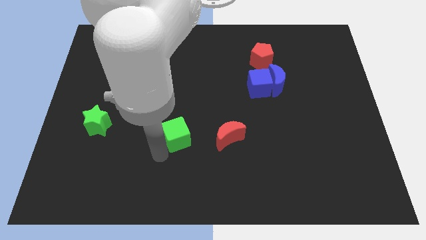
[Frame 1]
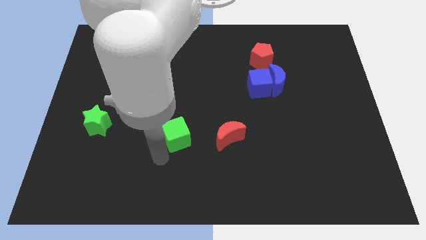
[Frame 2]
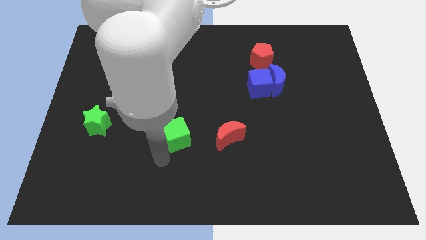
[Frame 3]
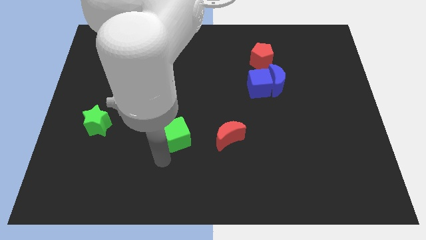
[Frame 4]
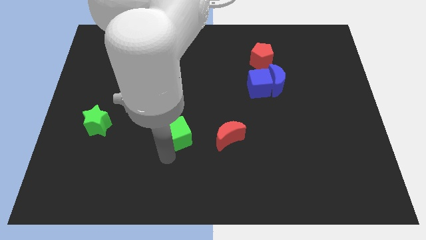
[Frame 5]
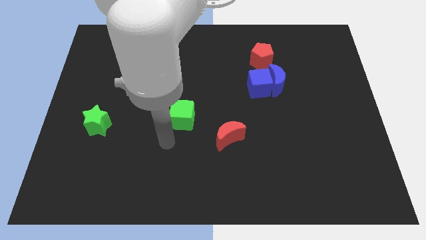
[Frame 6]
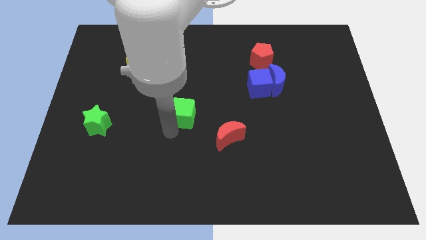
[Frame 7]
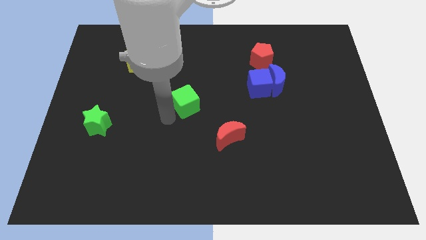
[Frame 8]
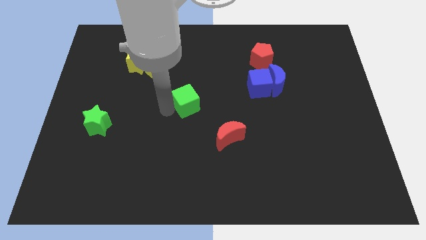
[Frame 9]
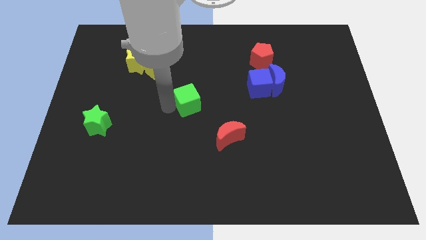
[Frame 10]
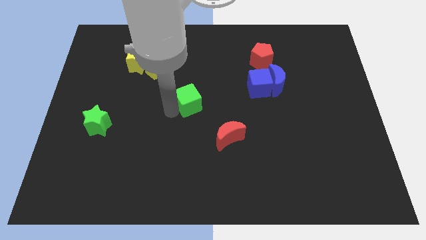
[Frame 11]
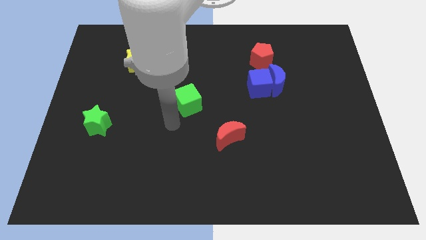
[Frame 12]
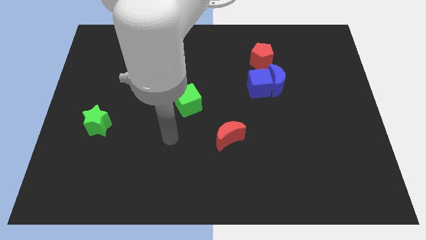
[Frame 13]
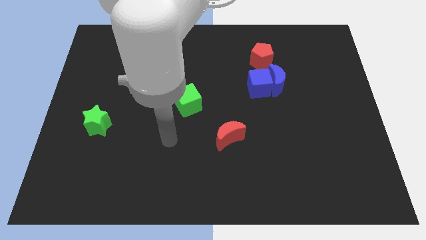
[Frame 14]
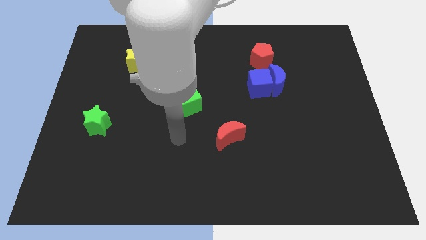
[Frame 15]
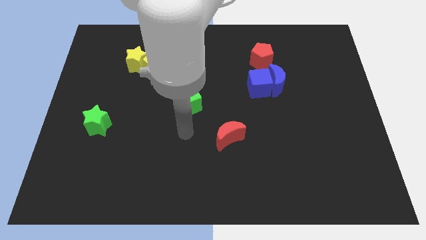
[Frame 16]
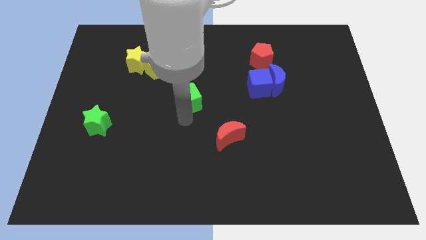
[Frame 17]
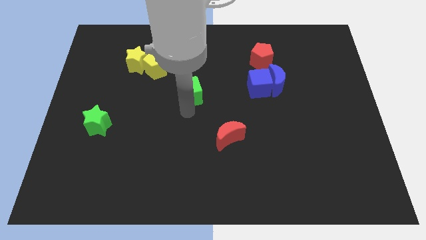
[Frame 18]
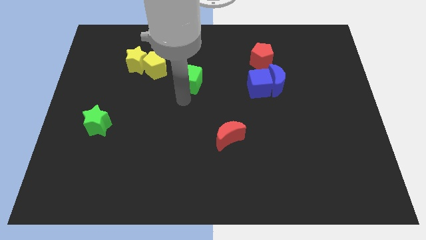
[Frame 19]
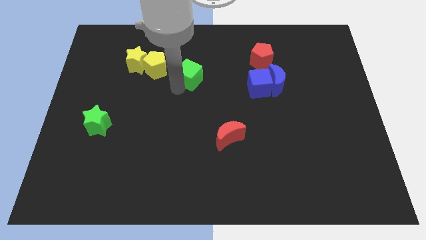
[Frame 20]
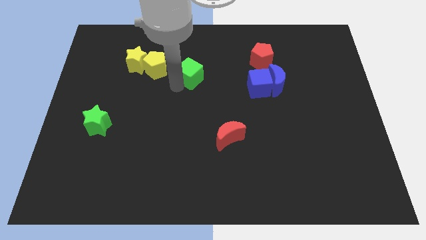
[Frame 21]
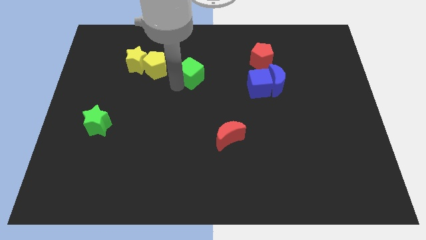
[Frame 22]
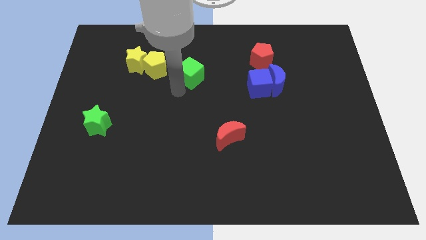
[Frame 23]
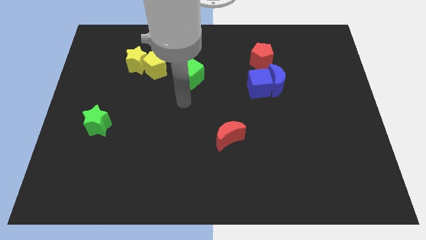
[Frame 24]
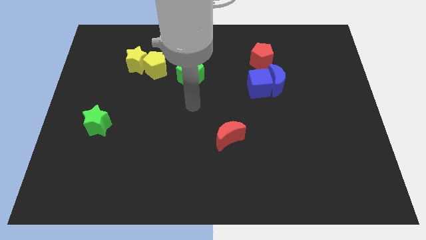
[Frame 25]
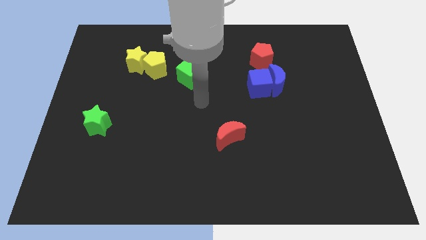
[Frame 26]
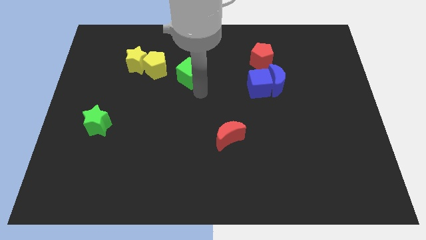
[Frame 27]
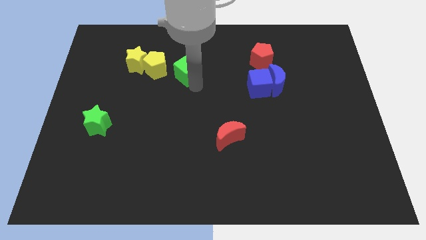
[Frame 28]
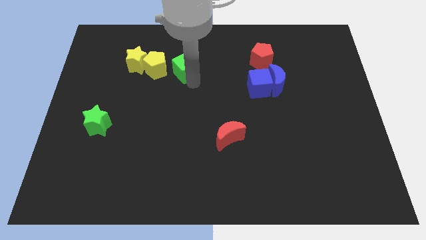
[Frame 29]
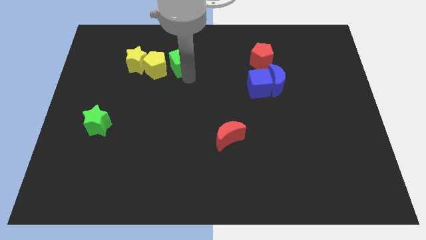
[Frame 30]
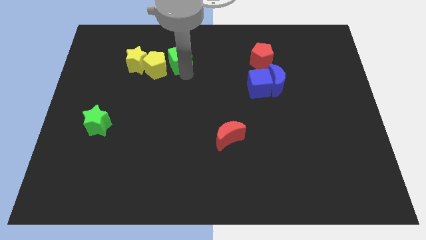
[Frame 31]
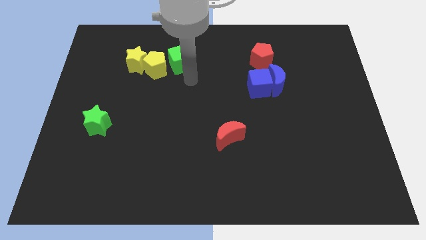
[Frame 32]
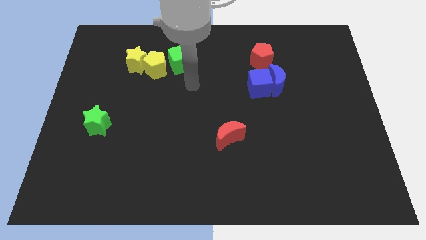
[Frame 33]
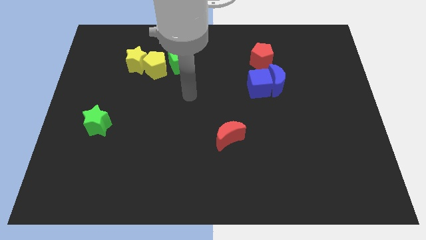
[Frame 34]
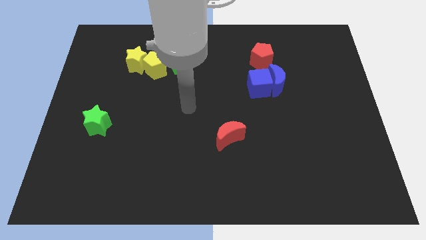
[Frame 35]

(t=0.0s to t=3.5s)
push the green cube to the right of the yellow pentagon

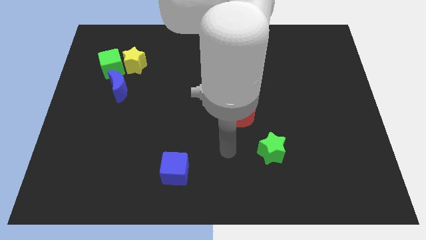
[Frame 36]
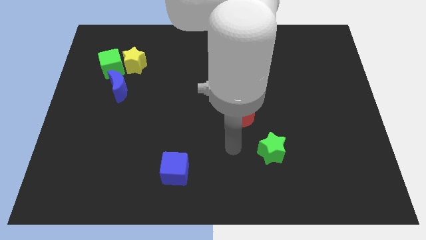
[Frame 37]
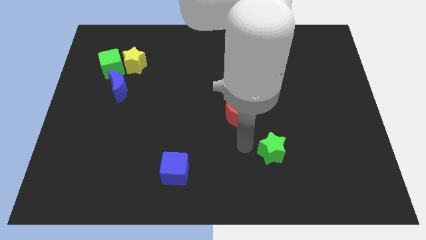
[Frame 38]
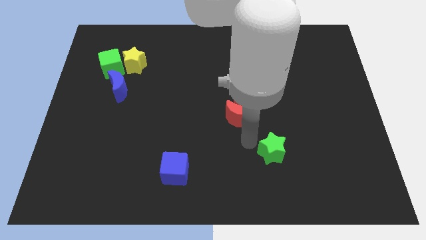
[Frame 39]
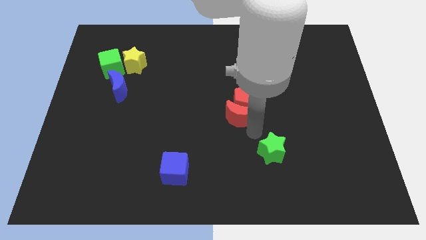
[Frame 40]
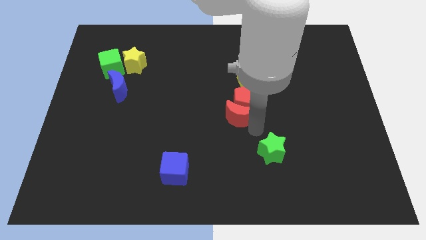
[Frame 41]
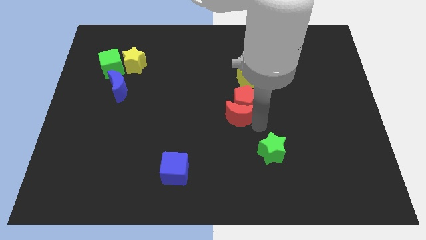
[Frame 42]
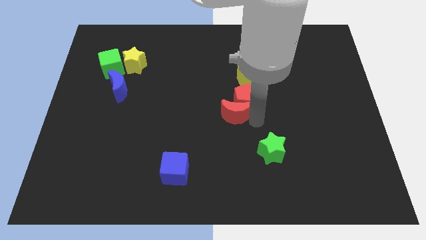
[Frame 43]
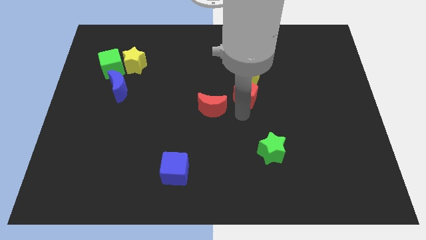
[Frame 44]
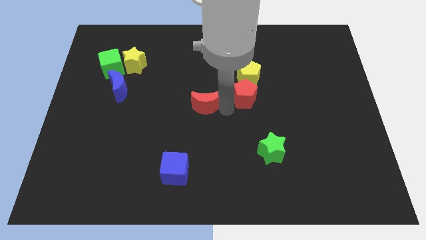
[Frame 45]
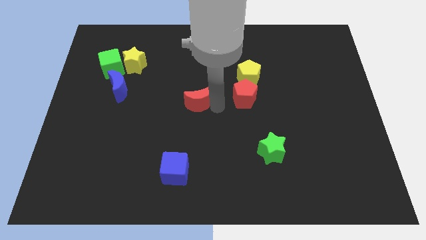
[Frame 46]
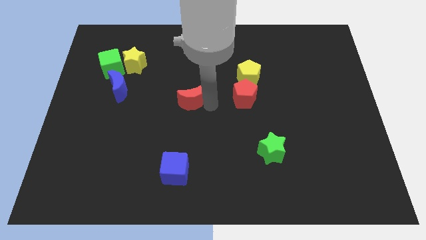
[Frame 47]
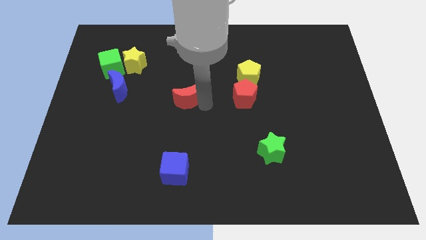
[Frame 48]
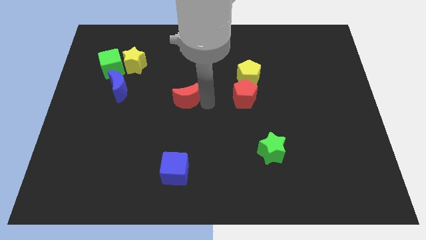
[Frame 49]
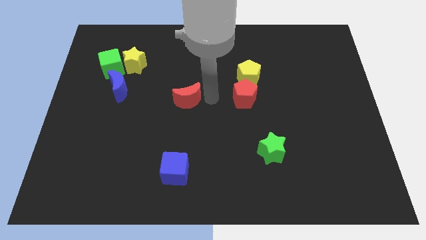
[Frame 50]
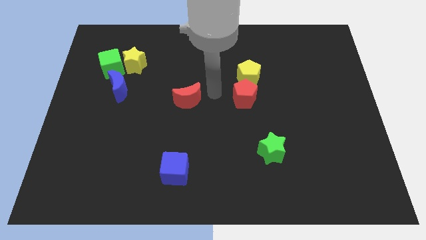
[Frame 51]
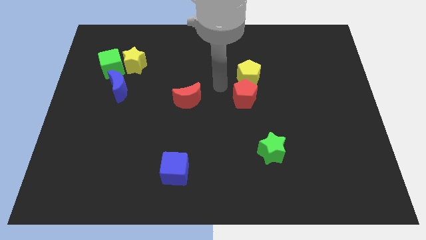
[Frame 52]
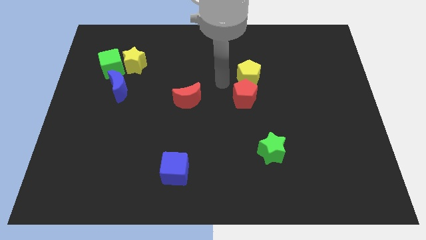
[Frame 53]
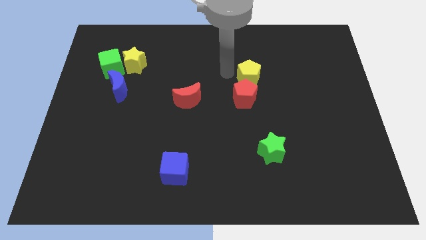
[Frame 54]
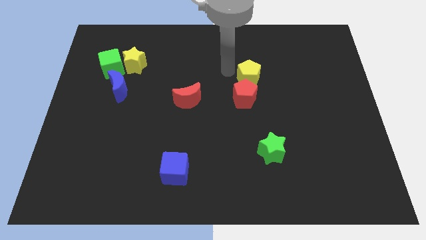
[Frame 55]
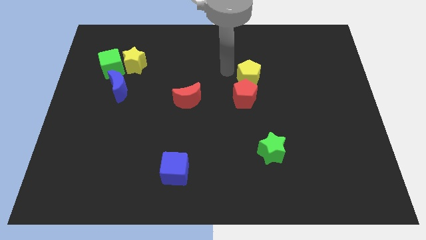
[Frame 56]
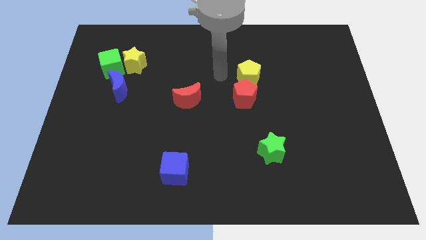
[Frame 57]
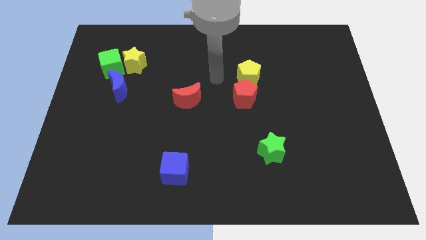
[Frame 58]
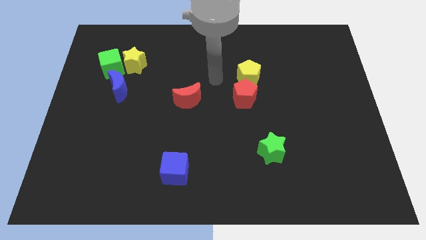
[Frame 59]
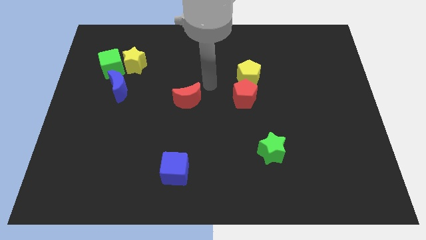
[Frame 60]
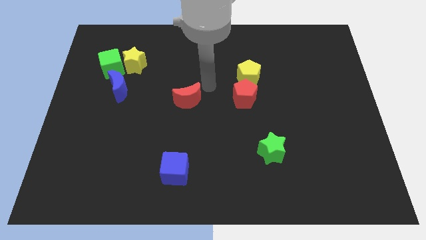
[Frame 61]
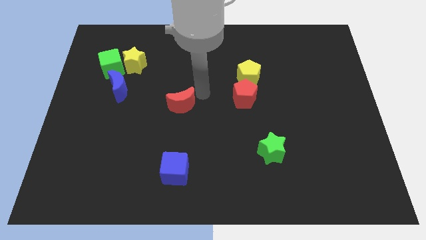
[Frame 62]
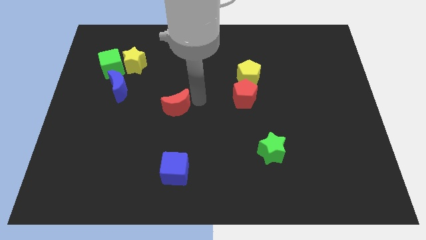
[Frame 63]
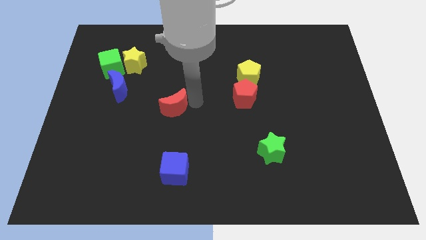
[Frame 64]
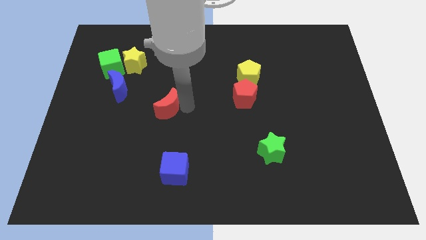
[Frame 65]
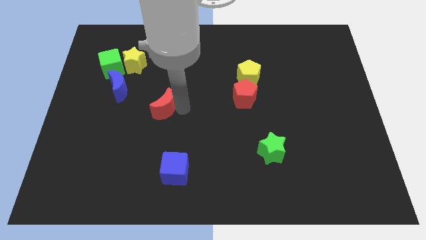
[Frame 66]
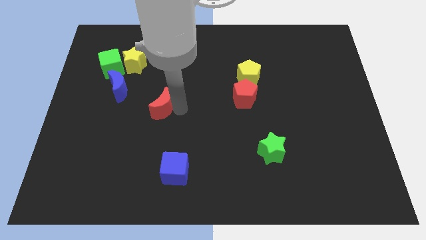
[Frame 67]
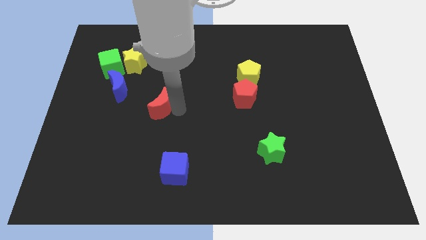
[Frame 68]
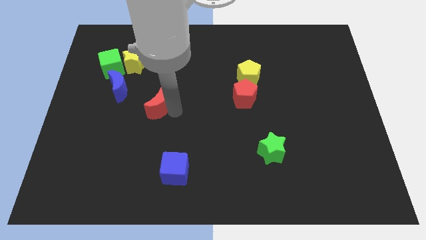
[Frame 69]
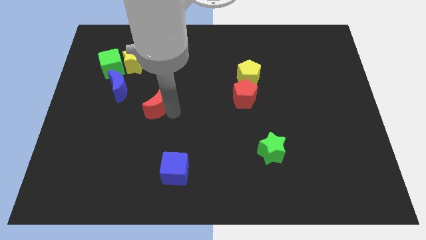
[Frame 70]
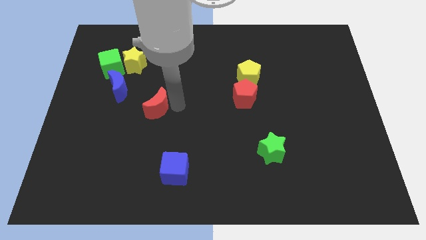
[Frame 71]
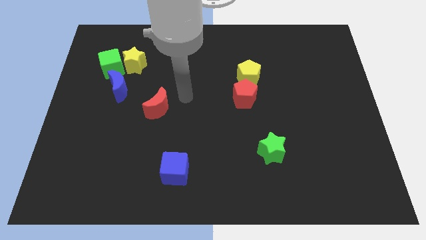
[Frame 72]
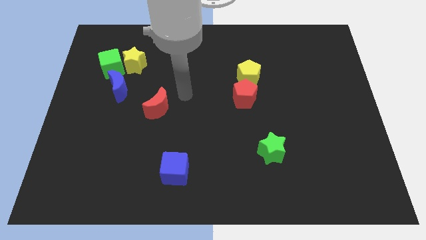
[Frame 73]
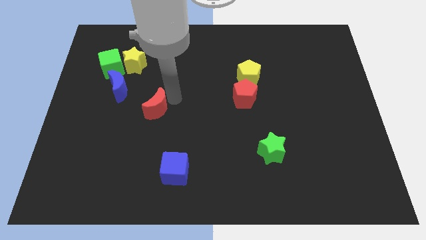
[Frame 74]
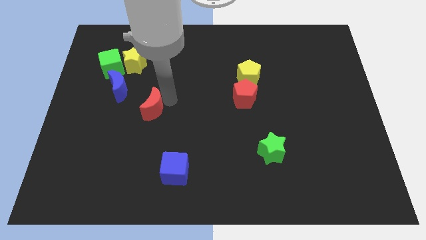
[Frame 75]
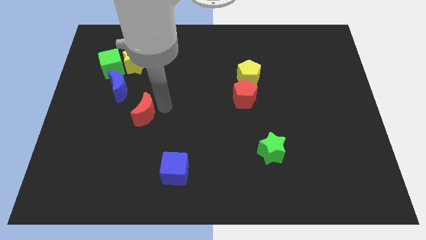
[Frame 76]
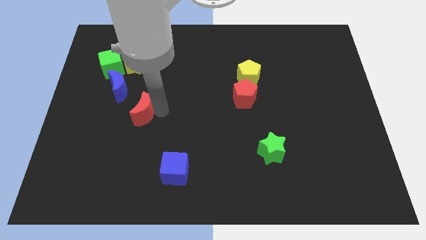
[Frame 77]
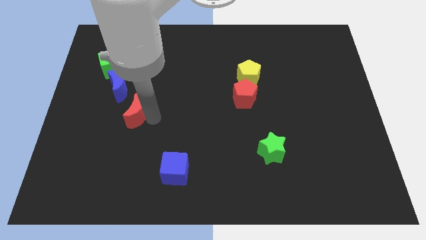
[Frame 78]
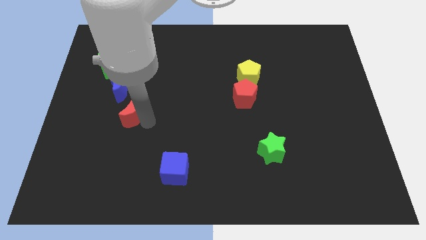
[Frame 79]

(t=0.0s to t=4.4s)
push red crescent

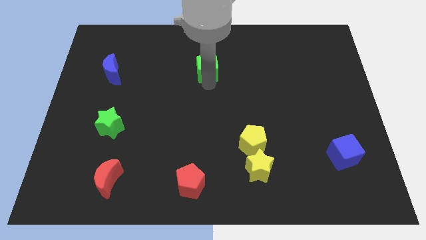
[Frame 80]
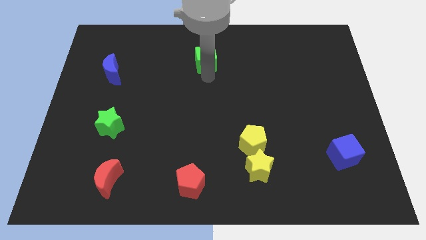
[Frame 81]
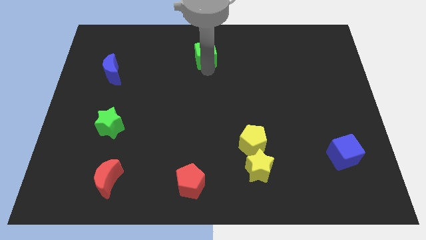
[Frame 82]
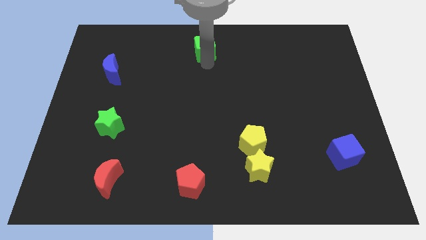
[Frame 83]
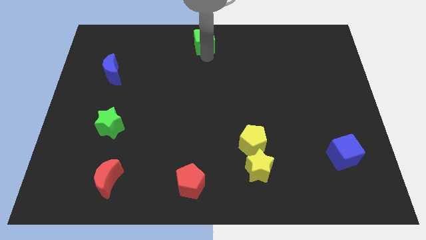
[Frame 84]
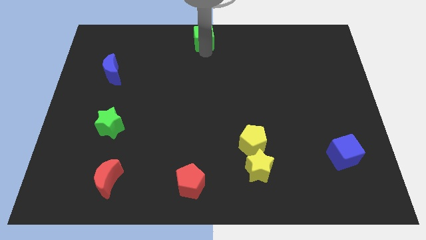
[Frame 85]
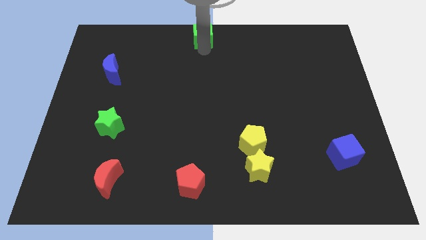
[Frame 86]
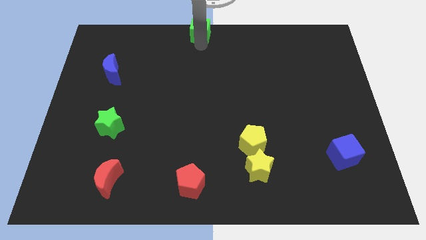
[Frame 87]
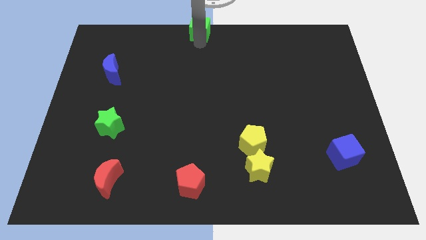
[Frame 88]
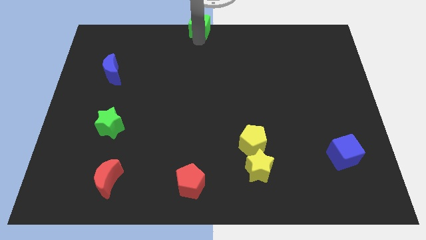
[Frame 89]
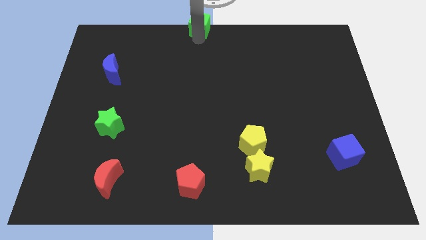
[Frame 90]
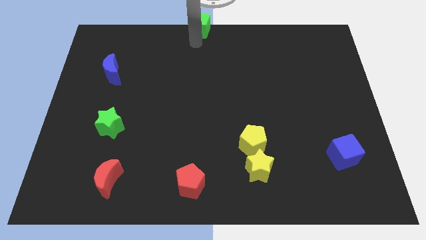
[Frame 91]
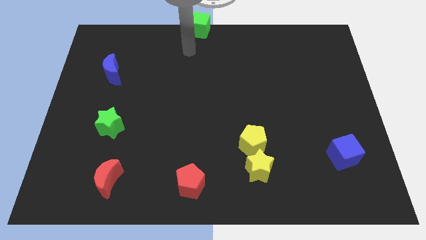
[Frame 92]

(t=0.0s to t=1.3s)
put the green cube at the top center of the board
